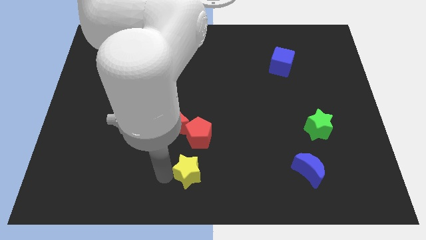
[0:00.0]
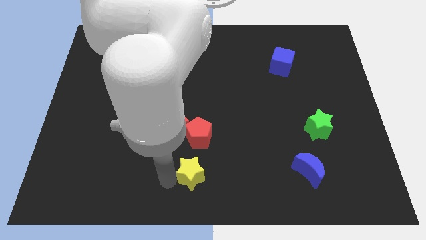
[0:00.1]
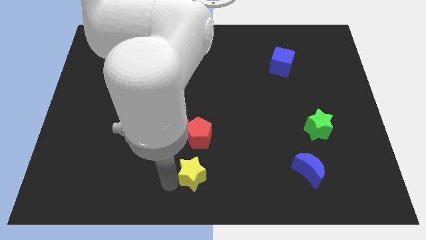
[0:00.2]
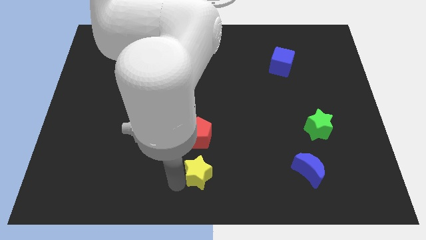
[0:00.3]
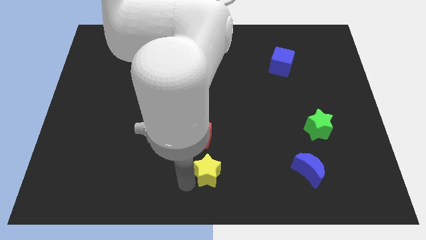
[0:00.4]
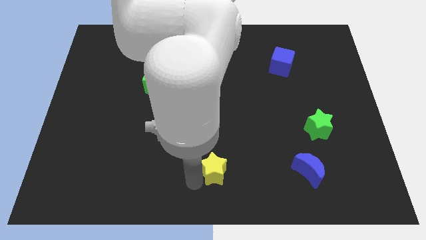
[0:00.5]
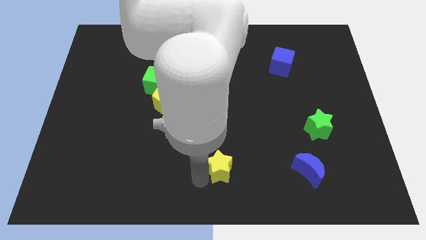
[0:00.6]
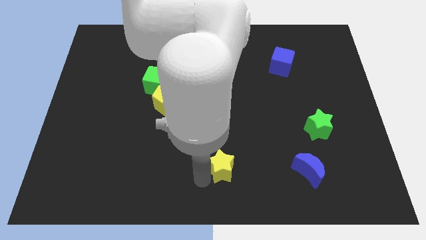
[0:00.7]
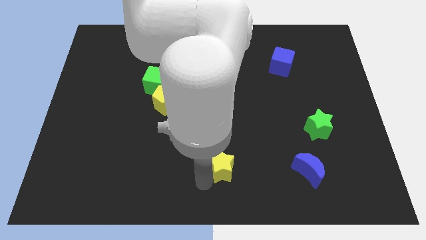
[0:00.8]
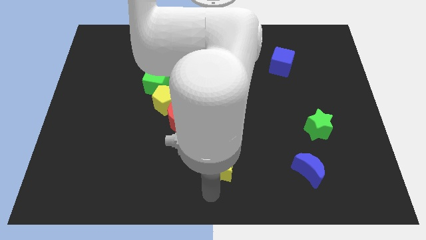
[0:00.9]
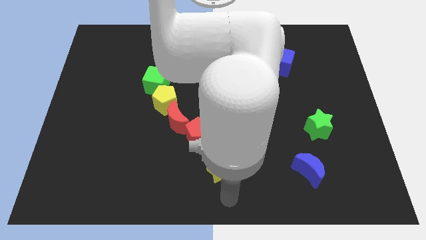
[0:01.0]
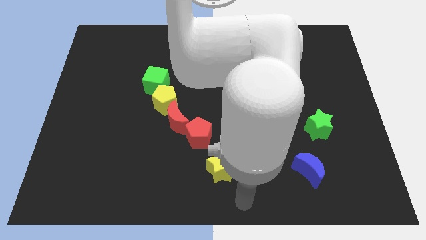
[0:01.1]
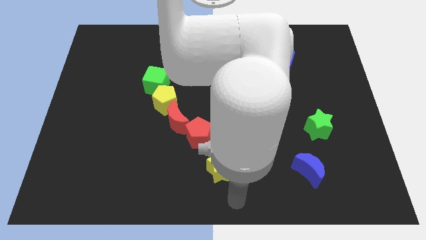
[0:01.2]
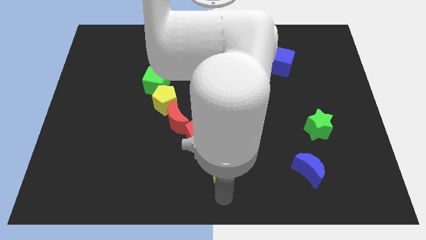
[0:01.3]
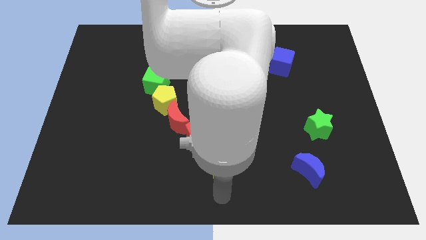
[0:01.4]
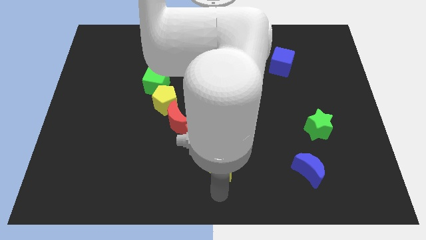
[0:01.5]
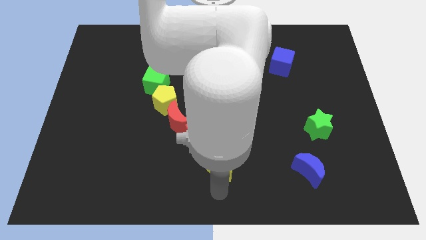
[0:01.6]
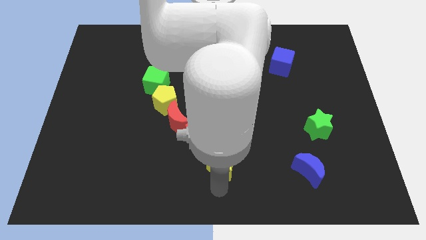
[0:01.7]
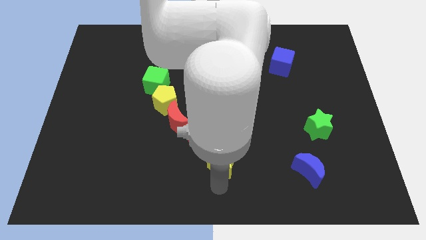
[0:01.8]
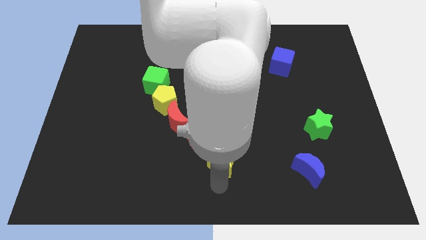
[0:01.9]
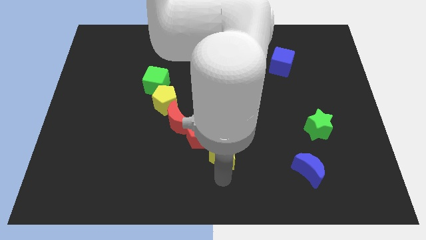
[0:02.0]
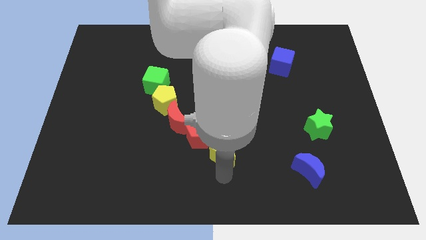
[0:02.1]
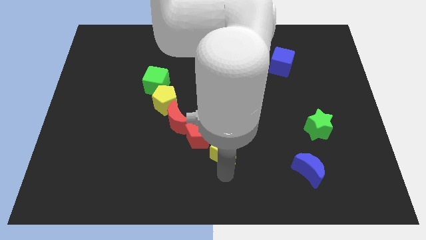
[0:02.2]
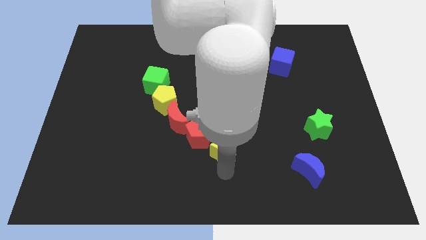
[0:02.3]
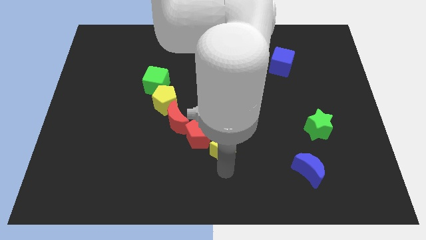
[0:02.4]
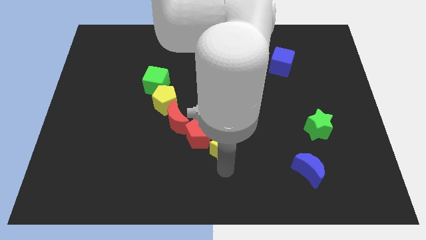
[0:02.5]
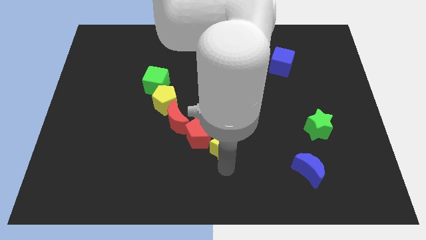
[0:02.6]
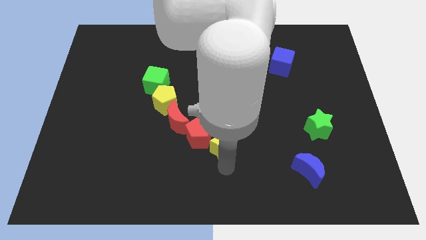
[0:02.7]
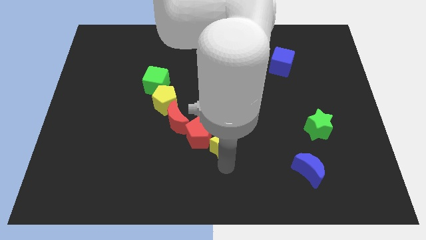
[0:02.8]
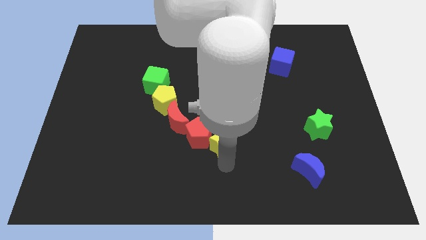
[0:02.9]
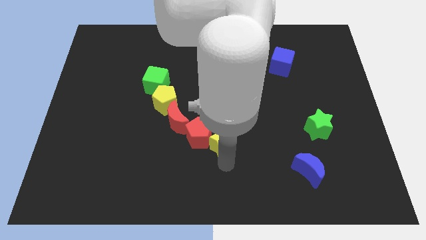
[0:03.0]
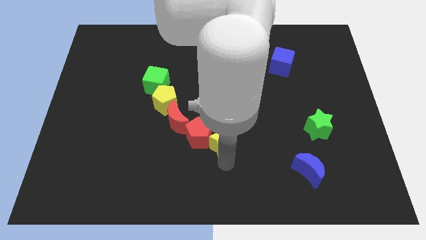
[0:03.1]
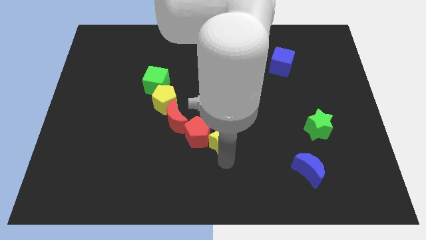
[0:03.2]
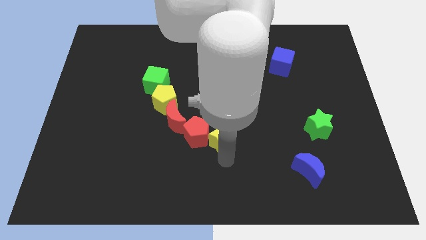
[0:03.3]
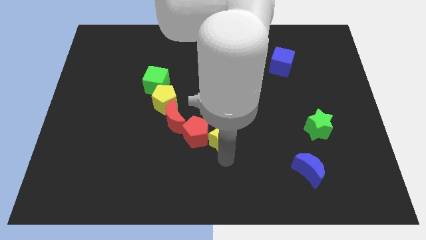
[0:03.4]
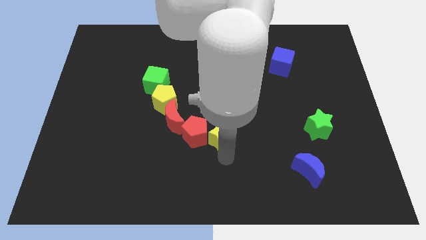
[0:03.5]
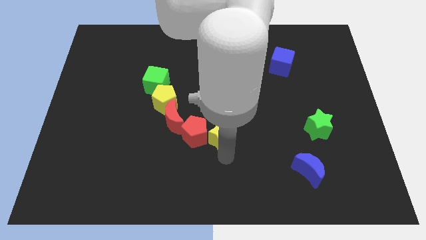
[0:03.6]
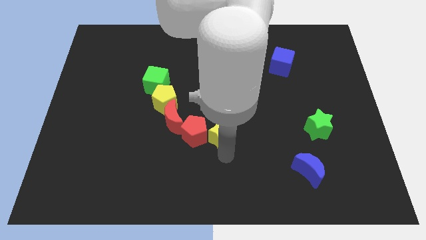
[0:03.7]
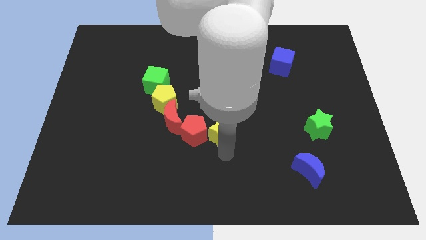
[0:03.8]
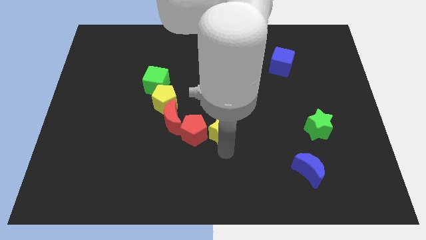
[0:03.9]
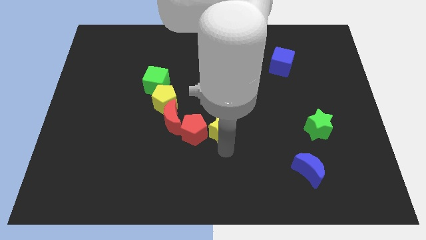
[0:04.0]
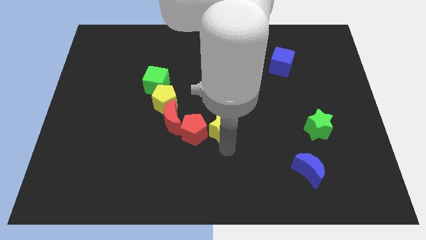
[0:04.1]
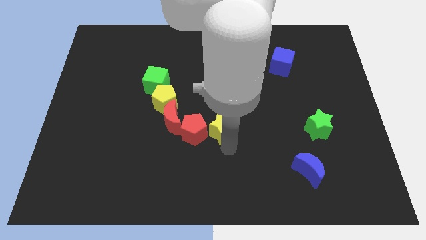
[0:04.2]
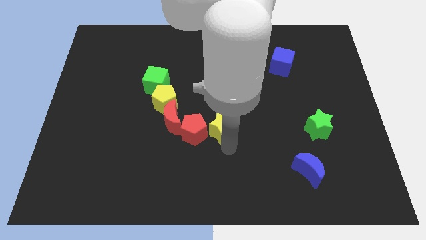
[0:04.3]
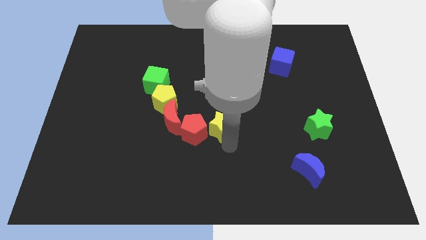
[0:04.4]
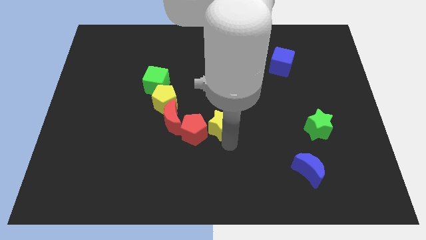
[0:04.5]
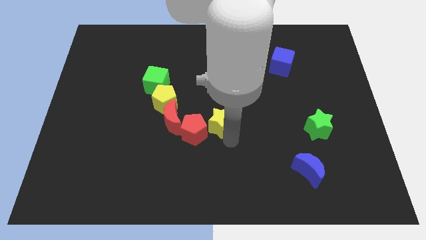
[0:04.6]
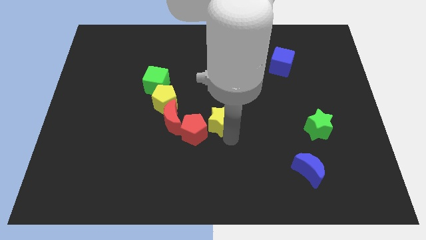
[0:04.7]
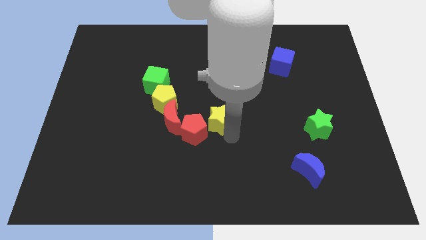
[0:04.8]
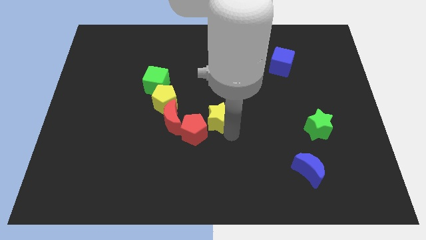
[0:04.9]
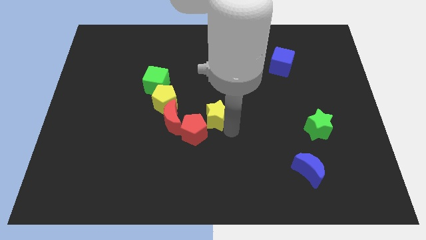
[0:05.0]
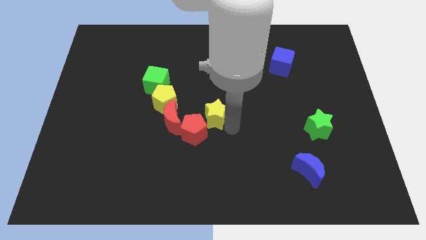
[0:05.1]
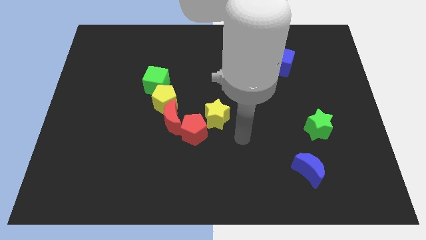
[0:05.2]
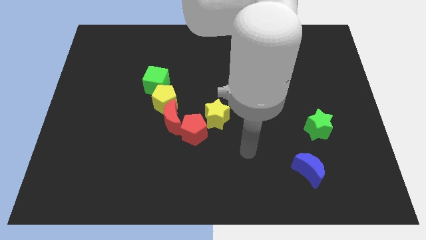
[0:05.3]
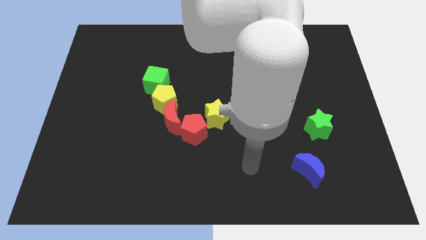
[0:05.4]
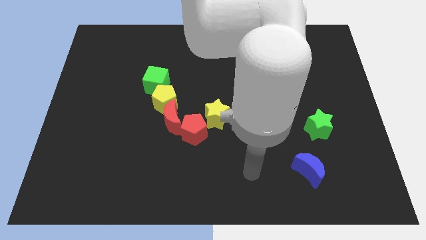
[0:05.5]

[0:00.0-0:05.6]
push the yellow star to the top right of red pentagon

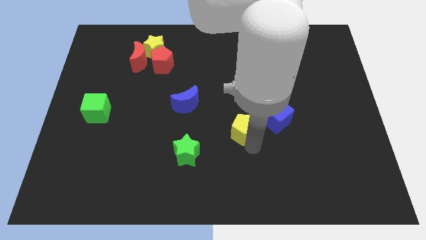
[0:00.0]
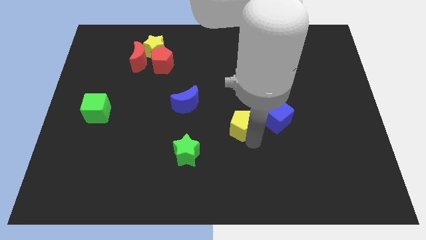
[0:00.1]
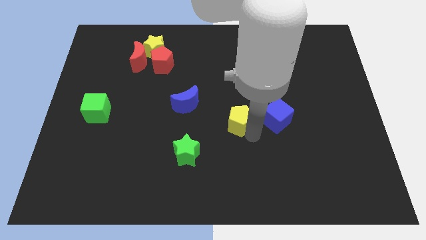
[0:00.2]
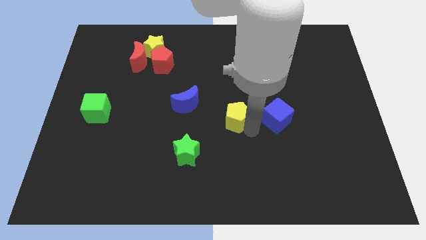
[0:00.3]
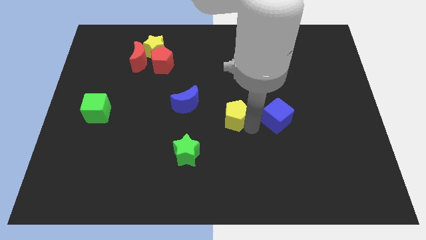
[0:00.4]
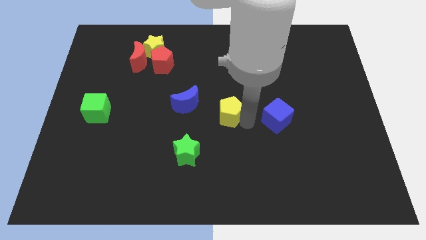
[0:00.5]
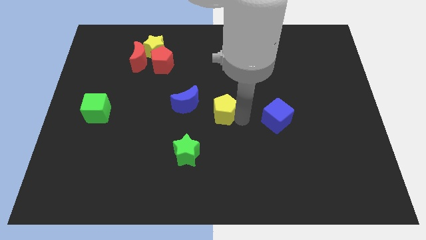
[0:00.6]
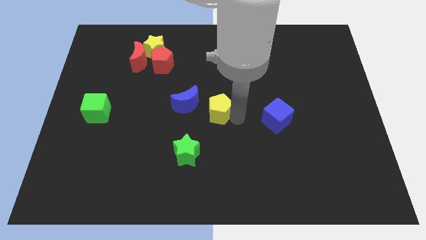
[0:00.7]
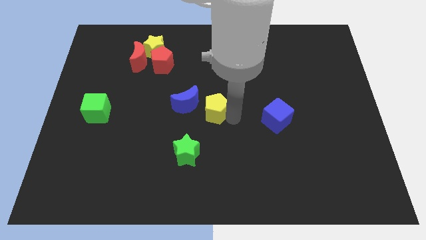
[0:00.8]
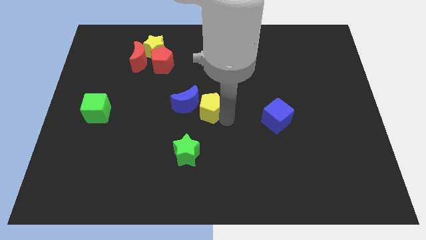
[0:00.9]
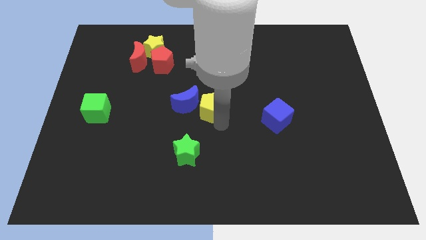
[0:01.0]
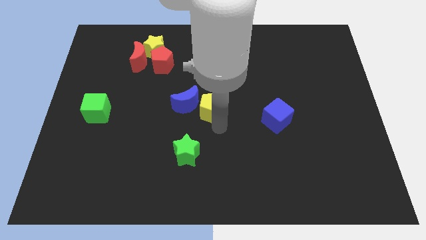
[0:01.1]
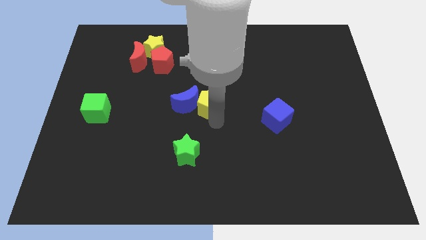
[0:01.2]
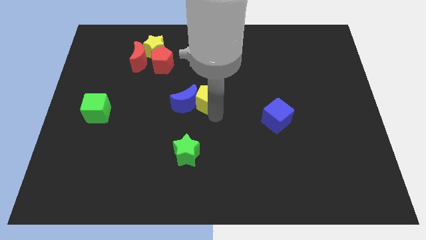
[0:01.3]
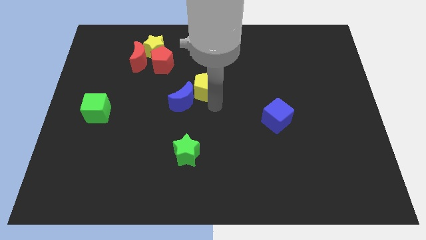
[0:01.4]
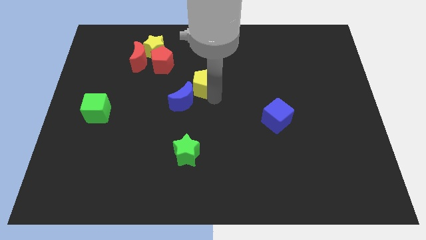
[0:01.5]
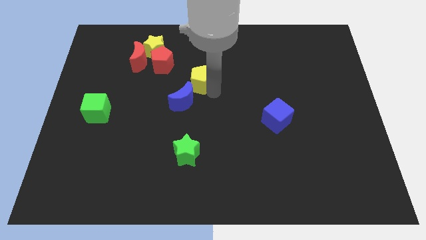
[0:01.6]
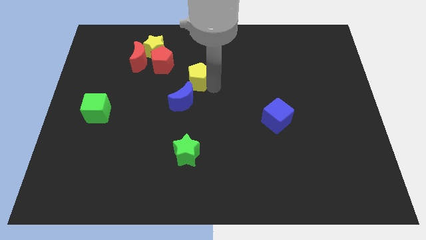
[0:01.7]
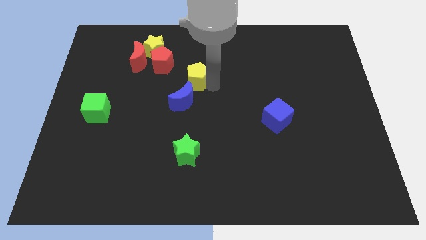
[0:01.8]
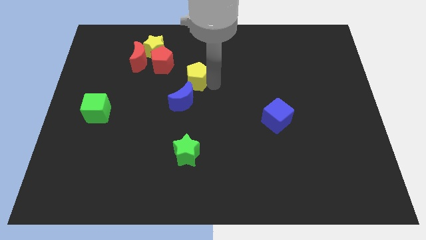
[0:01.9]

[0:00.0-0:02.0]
push the yellow pentagon towards upward

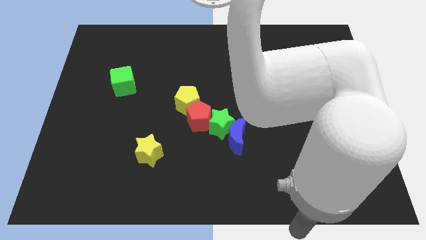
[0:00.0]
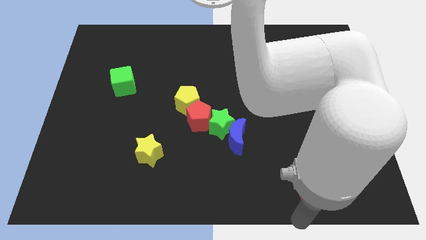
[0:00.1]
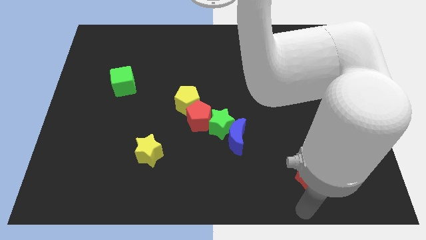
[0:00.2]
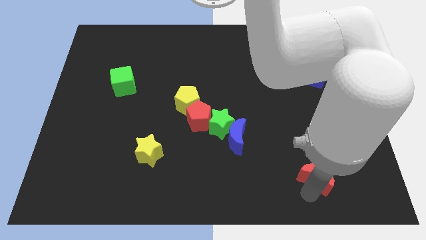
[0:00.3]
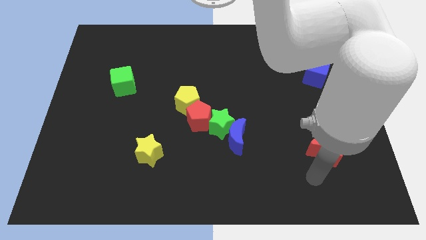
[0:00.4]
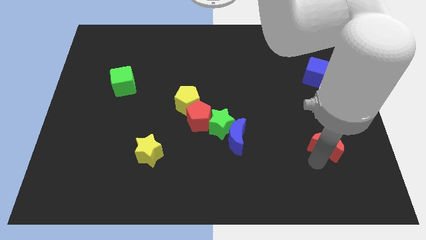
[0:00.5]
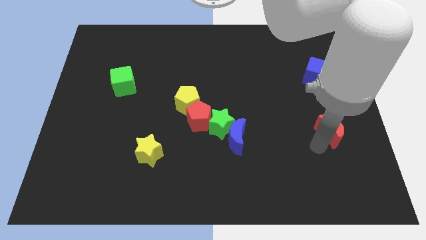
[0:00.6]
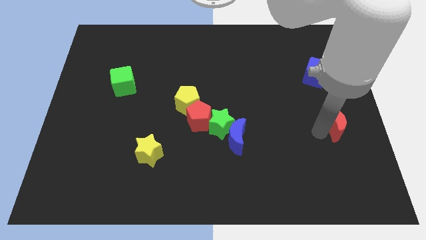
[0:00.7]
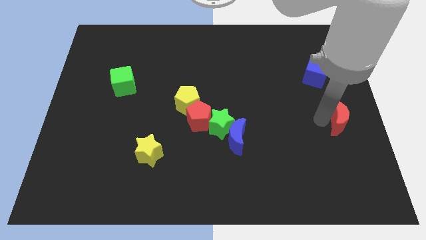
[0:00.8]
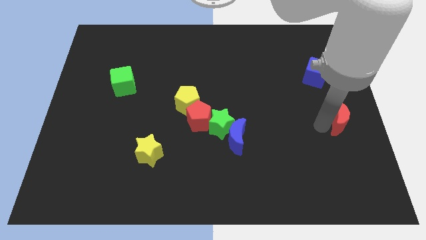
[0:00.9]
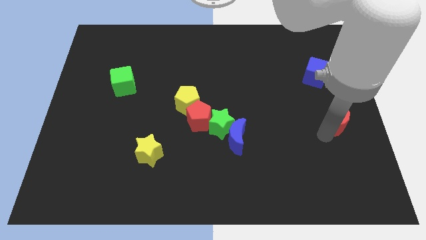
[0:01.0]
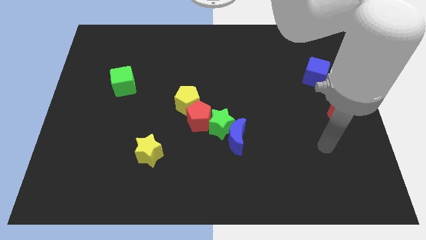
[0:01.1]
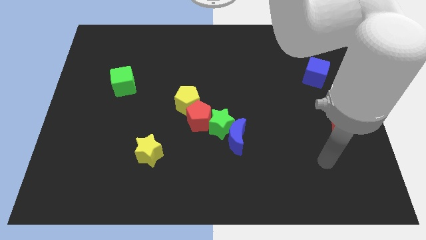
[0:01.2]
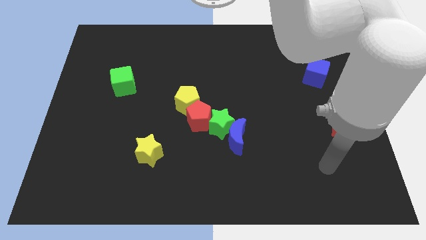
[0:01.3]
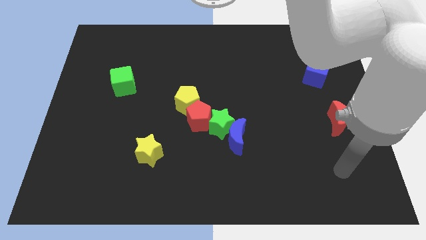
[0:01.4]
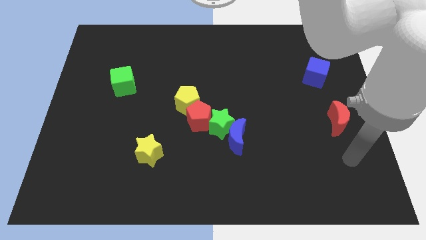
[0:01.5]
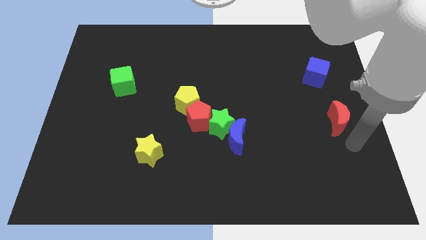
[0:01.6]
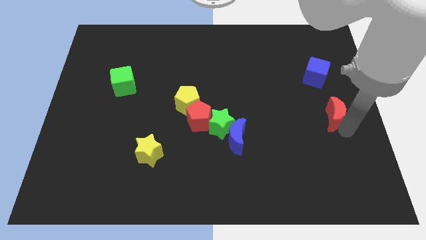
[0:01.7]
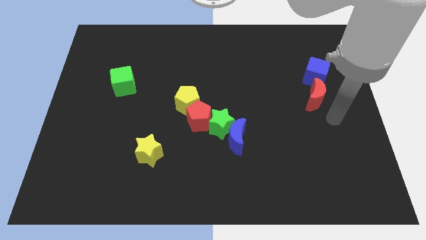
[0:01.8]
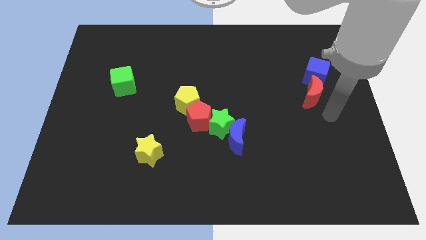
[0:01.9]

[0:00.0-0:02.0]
push the red moon vertically below the blue cube
